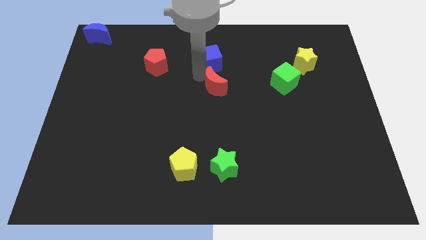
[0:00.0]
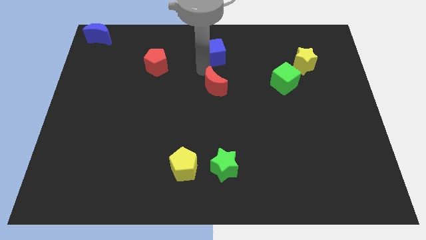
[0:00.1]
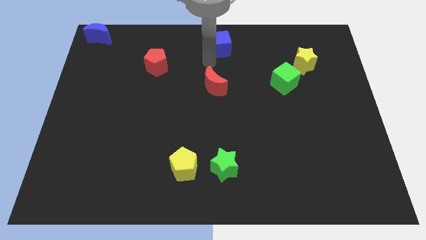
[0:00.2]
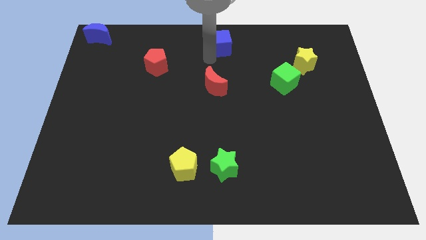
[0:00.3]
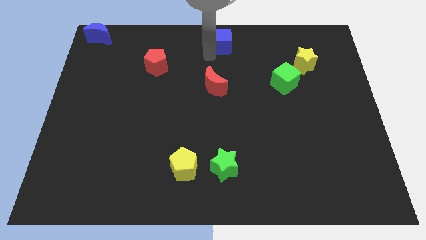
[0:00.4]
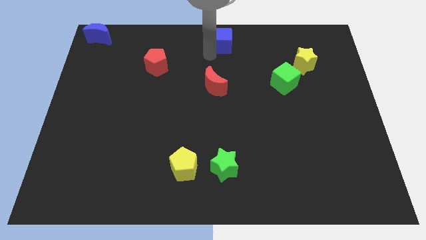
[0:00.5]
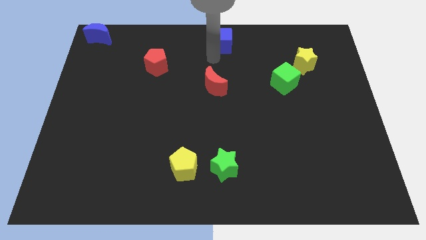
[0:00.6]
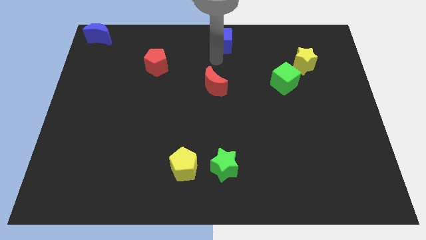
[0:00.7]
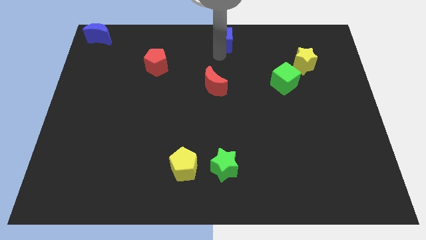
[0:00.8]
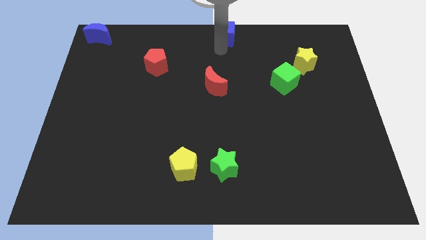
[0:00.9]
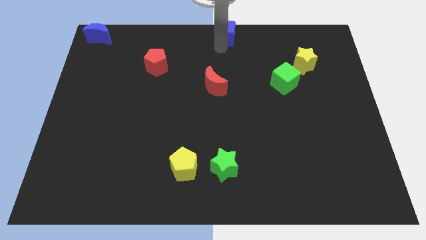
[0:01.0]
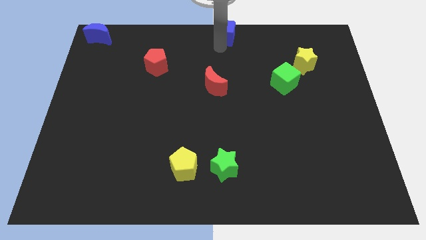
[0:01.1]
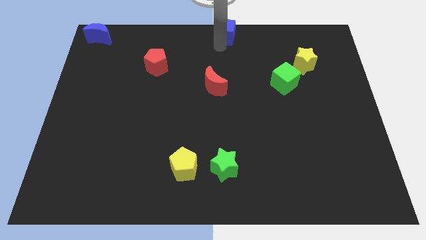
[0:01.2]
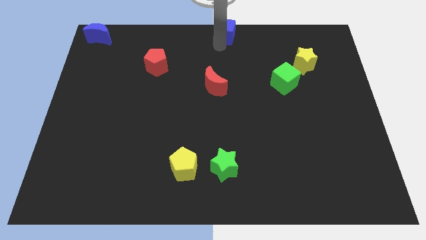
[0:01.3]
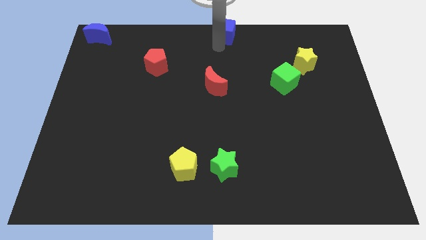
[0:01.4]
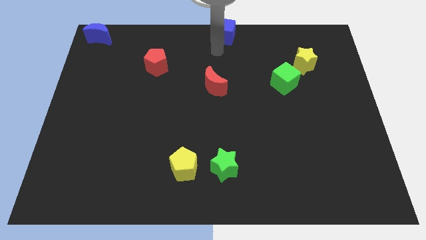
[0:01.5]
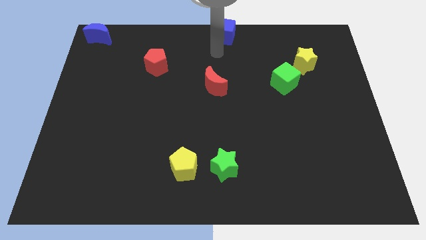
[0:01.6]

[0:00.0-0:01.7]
push the blue cube to the top centre of the board

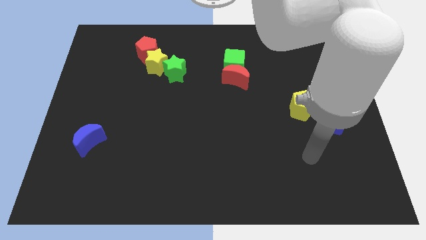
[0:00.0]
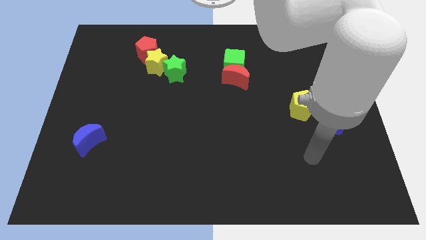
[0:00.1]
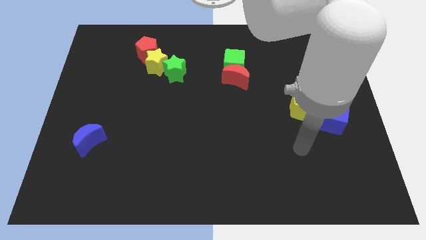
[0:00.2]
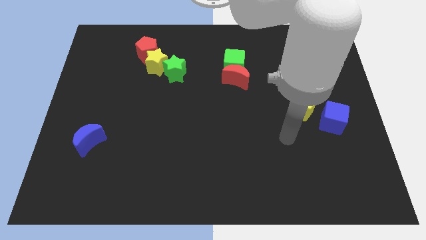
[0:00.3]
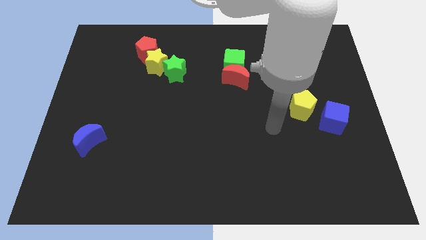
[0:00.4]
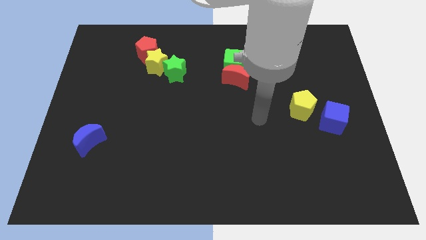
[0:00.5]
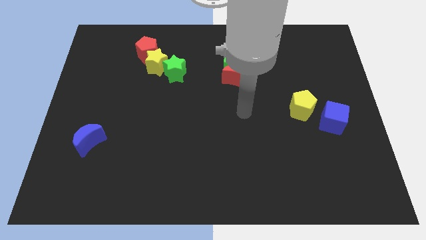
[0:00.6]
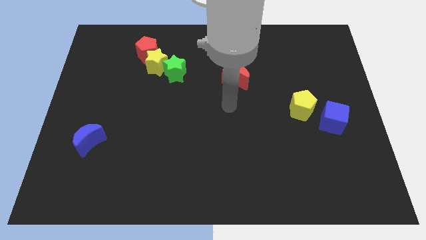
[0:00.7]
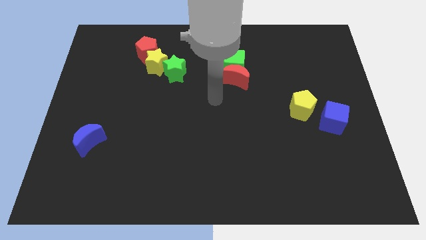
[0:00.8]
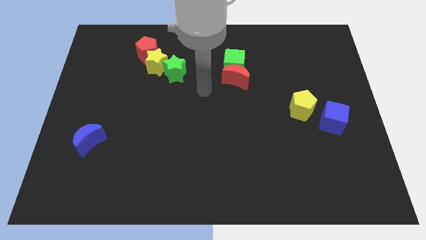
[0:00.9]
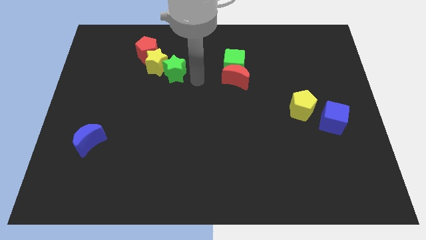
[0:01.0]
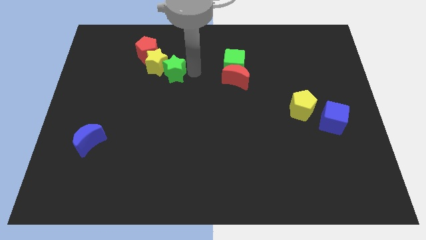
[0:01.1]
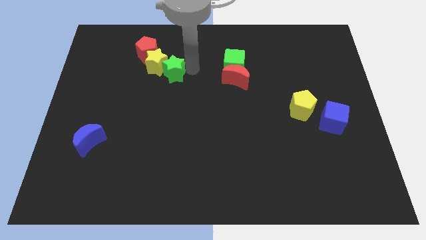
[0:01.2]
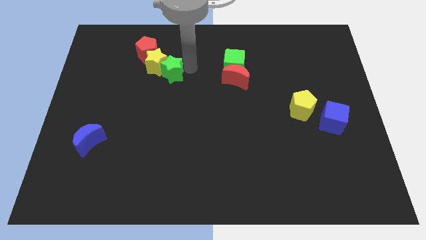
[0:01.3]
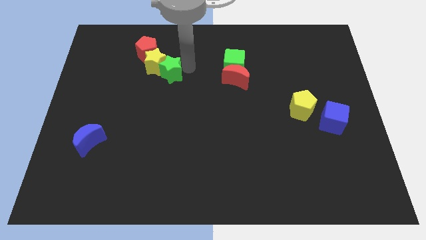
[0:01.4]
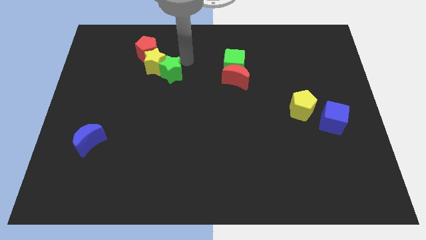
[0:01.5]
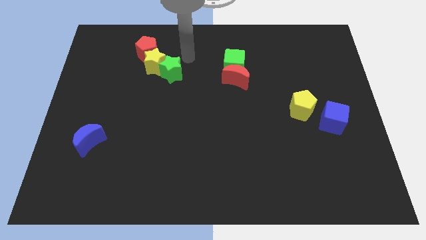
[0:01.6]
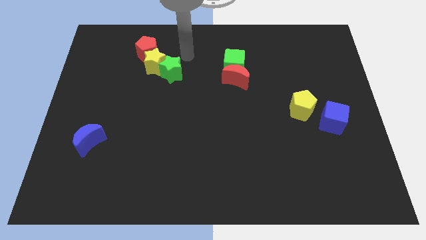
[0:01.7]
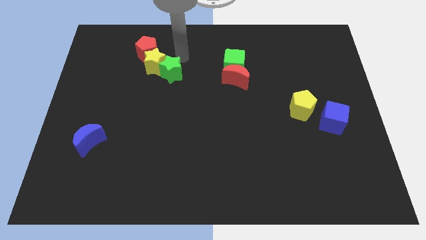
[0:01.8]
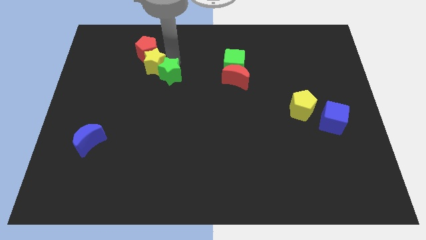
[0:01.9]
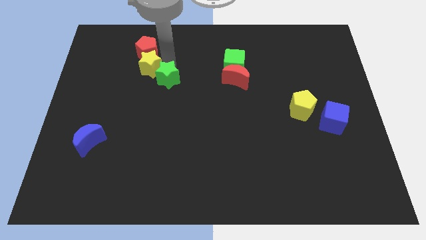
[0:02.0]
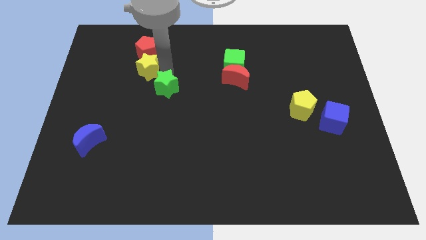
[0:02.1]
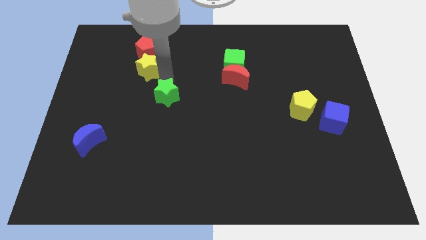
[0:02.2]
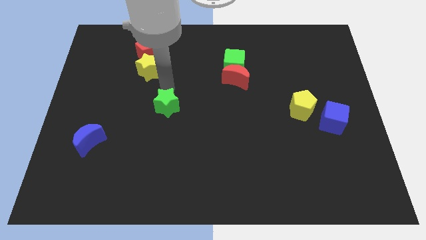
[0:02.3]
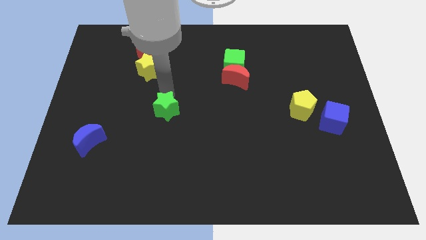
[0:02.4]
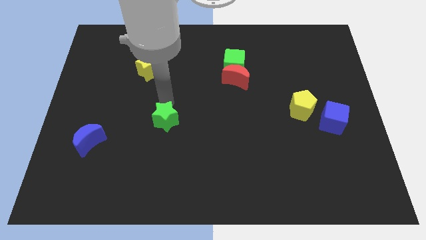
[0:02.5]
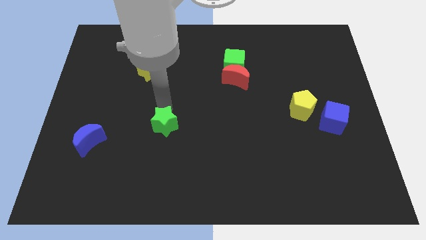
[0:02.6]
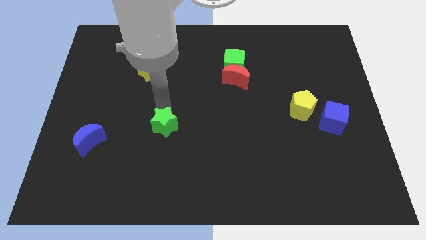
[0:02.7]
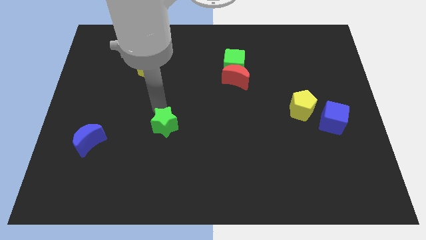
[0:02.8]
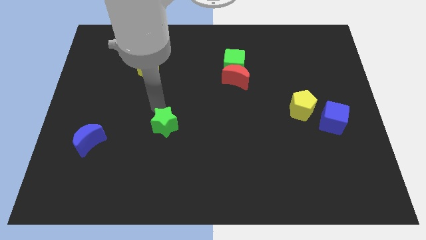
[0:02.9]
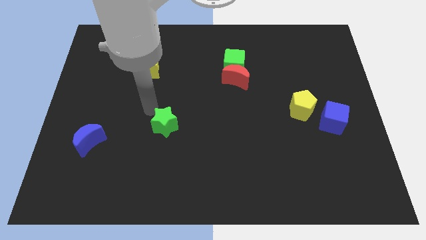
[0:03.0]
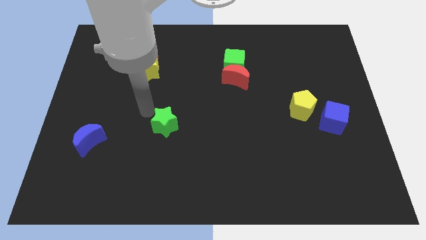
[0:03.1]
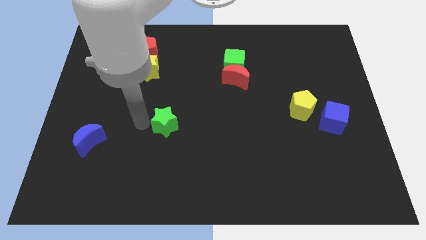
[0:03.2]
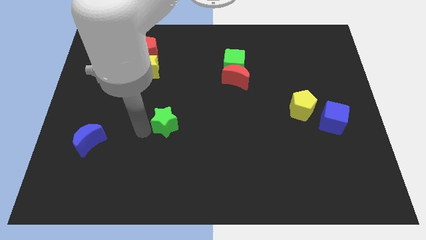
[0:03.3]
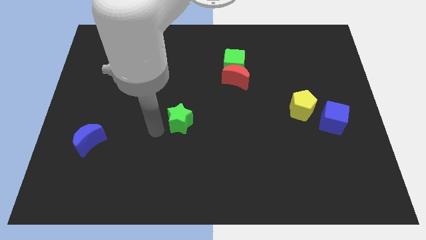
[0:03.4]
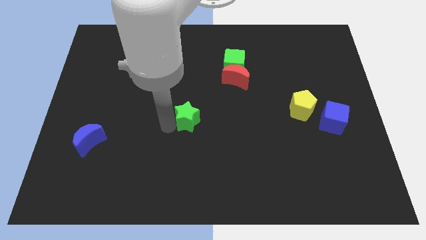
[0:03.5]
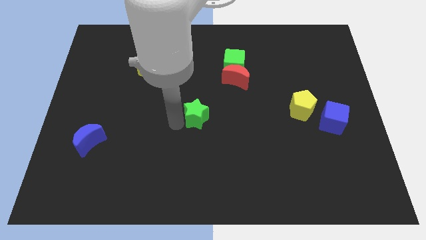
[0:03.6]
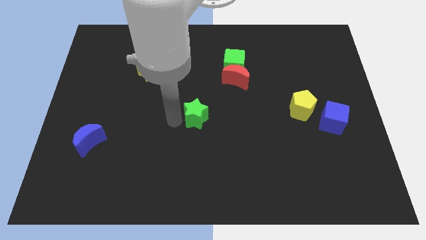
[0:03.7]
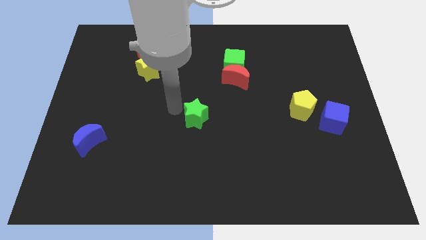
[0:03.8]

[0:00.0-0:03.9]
push the green cube to the center of the board

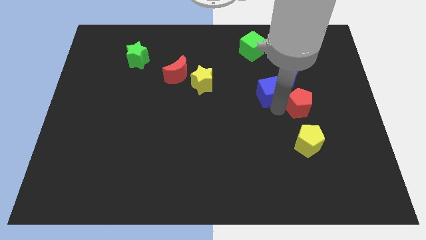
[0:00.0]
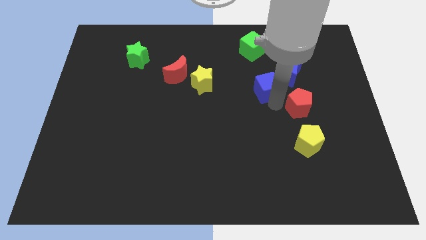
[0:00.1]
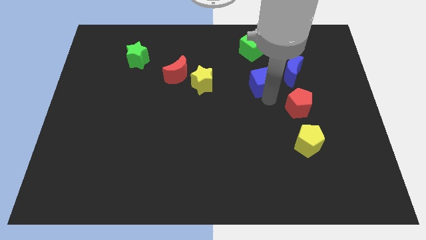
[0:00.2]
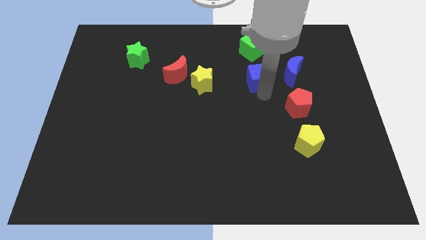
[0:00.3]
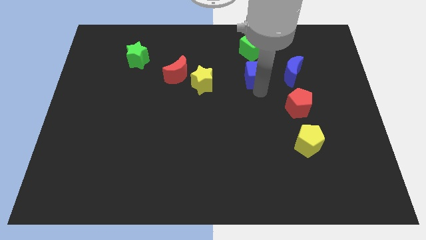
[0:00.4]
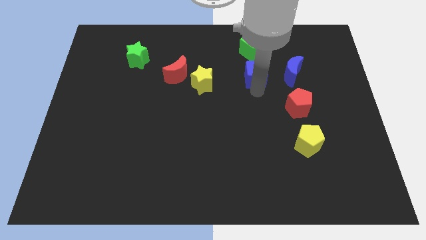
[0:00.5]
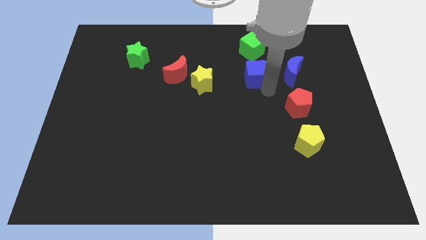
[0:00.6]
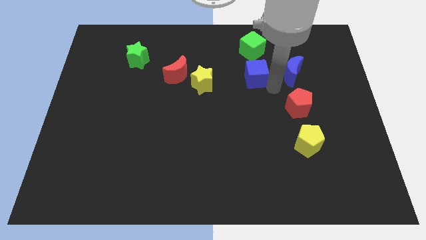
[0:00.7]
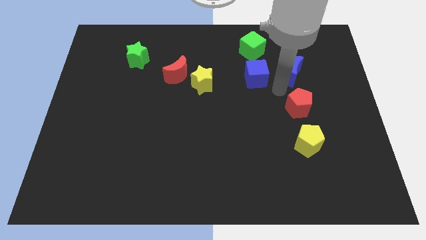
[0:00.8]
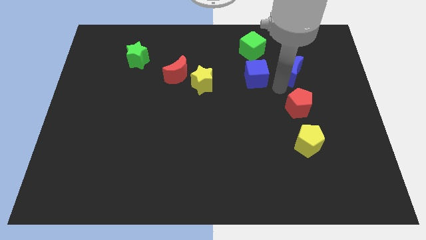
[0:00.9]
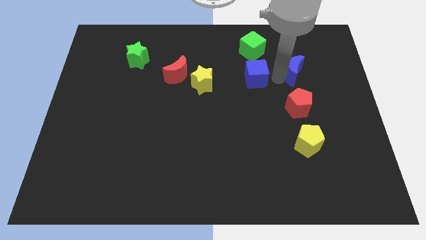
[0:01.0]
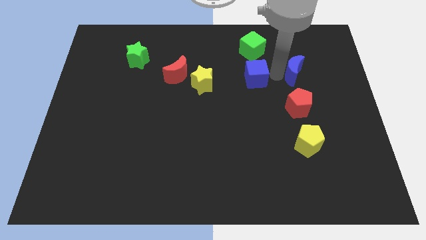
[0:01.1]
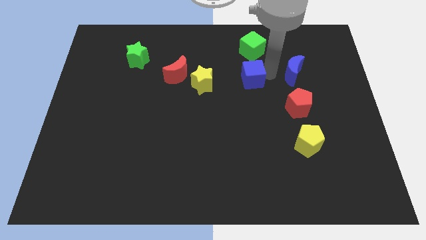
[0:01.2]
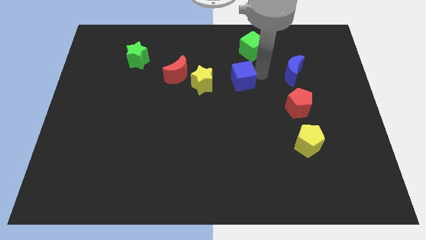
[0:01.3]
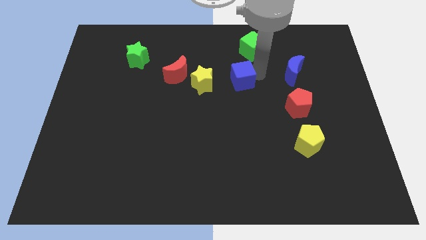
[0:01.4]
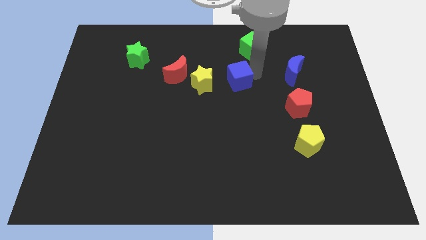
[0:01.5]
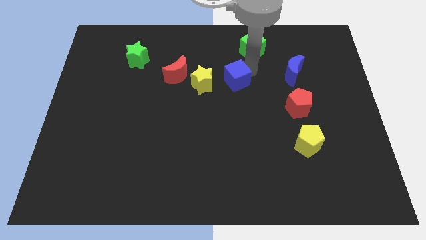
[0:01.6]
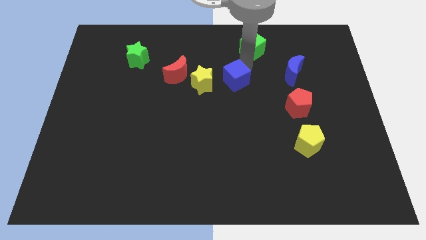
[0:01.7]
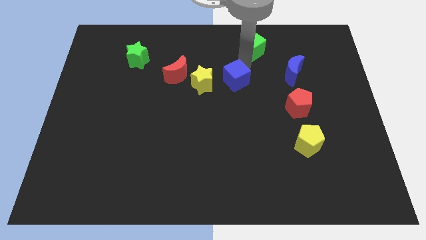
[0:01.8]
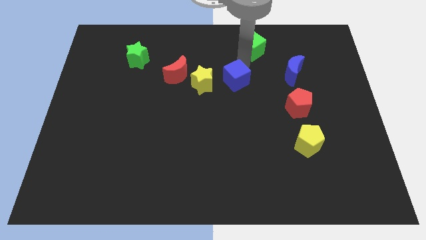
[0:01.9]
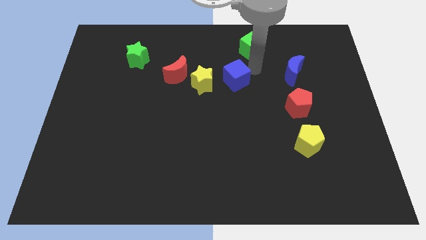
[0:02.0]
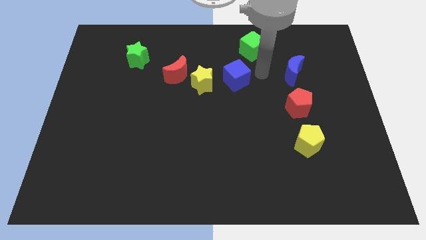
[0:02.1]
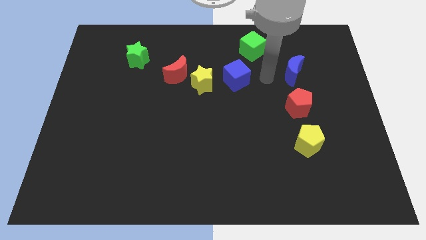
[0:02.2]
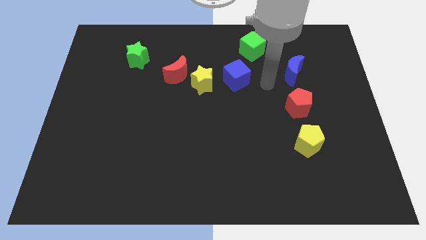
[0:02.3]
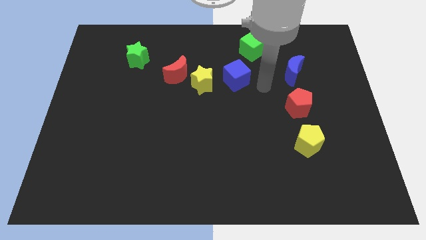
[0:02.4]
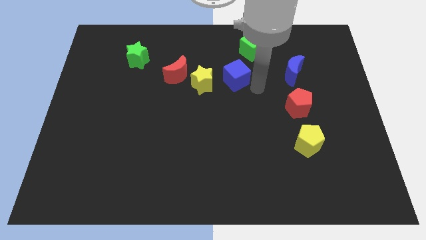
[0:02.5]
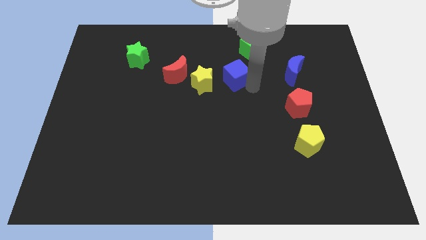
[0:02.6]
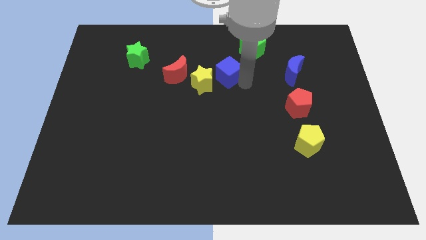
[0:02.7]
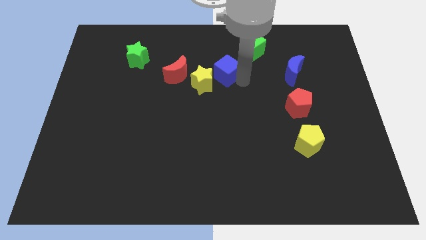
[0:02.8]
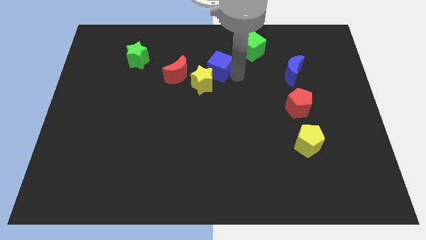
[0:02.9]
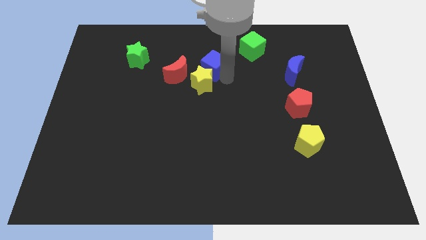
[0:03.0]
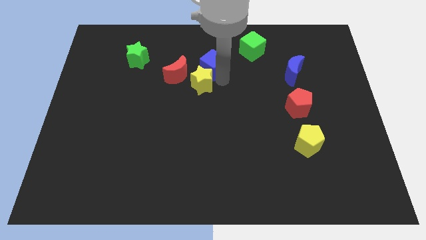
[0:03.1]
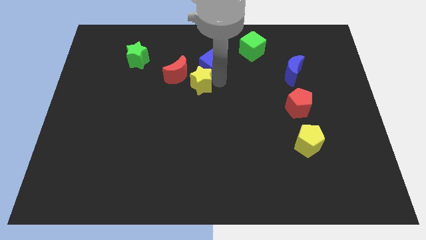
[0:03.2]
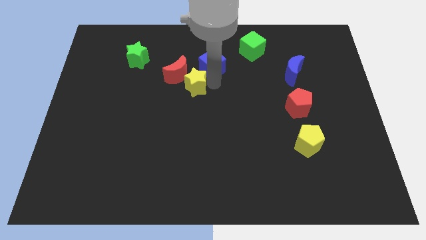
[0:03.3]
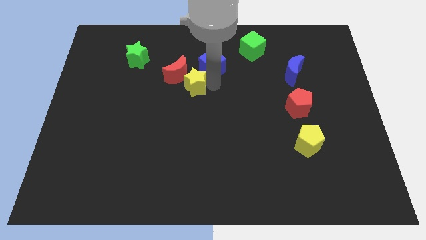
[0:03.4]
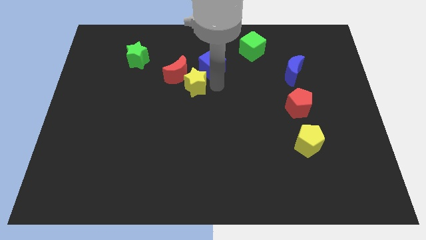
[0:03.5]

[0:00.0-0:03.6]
place the blue cube on the top right of yellow star
